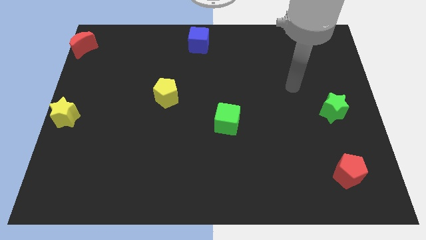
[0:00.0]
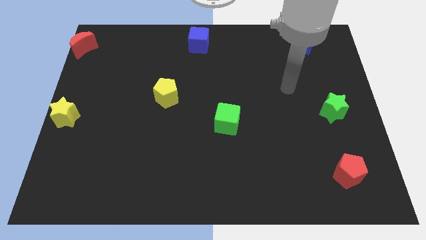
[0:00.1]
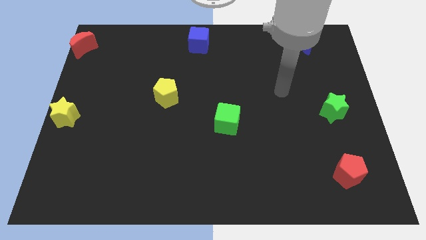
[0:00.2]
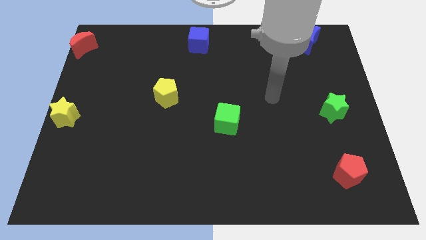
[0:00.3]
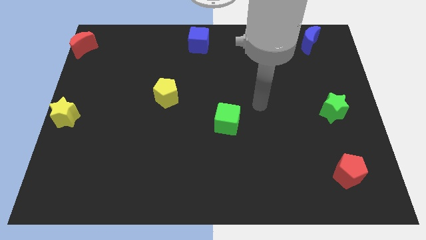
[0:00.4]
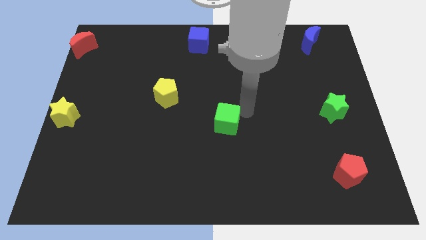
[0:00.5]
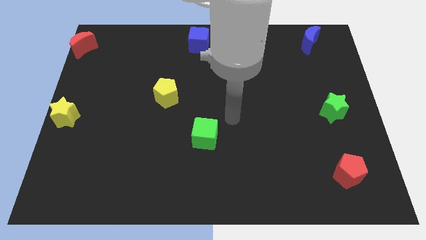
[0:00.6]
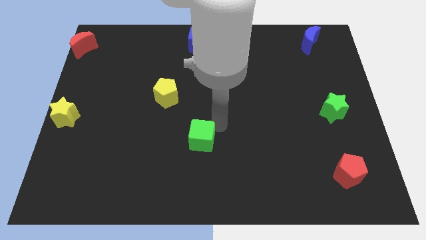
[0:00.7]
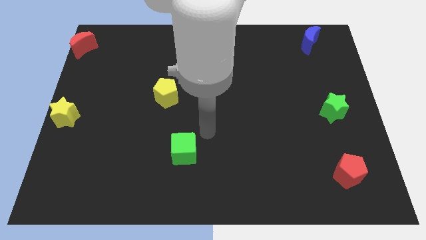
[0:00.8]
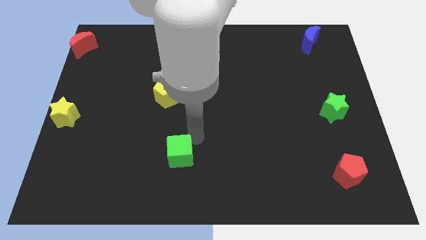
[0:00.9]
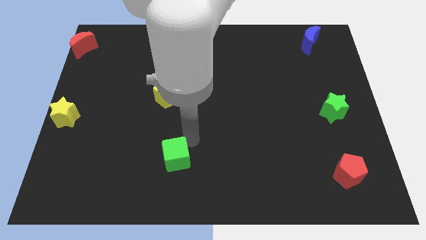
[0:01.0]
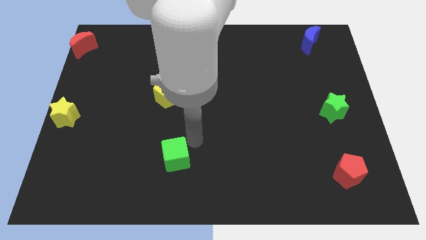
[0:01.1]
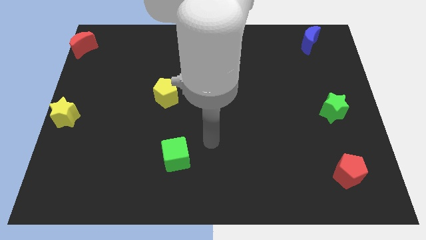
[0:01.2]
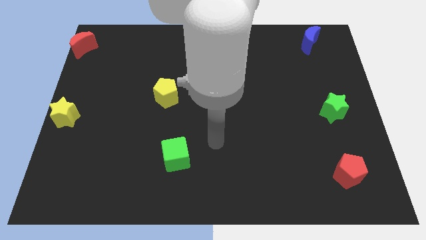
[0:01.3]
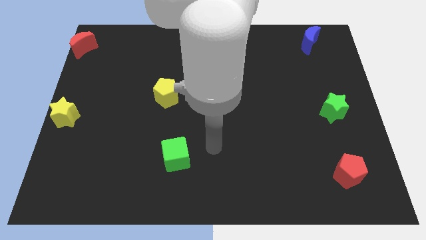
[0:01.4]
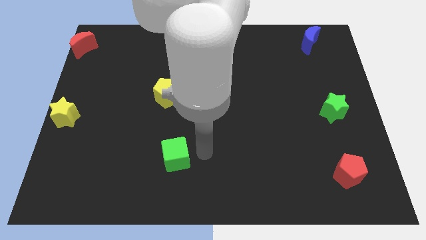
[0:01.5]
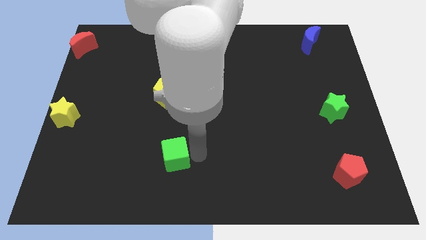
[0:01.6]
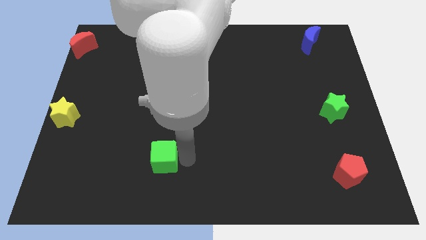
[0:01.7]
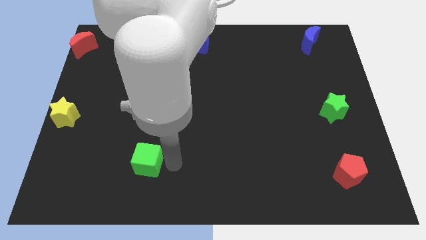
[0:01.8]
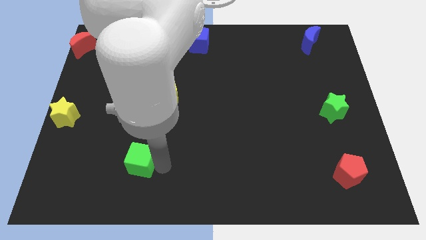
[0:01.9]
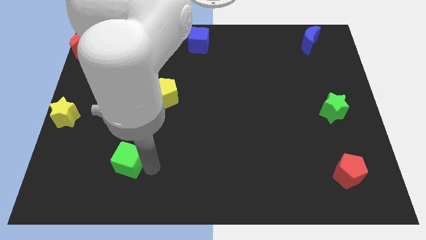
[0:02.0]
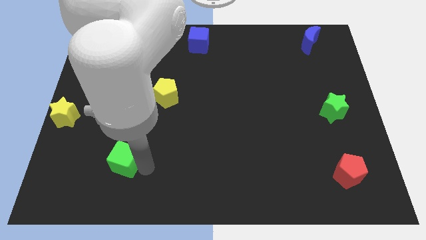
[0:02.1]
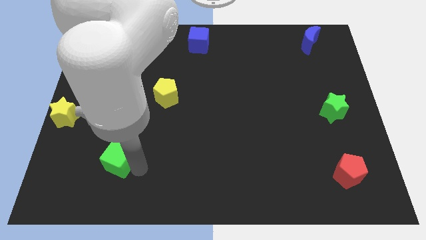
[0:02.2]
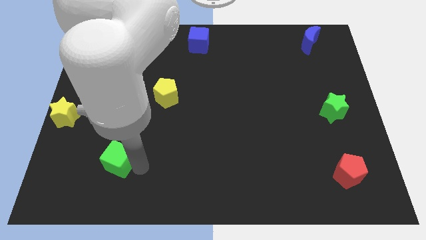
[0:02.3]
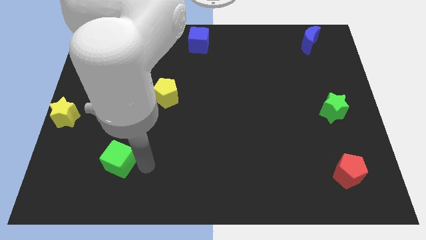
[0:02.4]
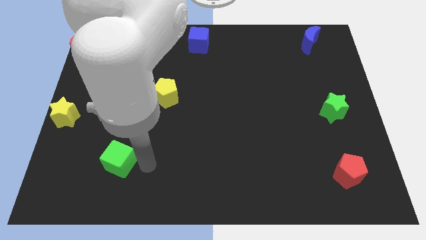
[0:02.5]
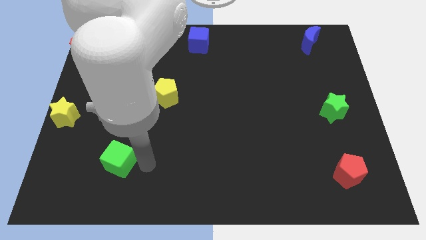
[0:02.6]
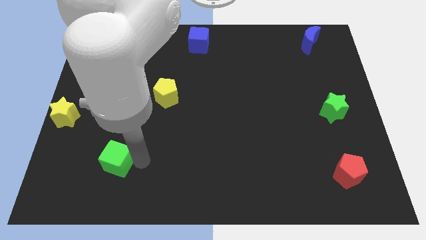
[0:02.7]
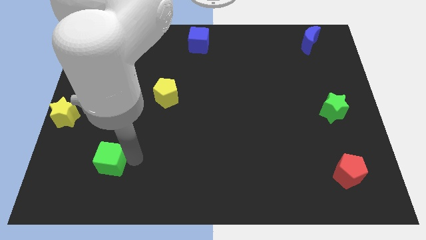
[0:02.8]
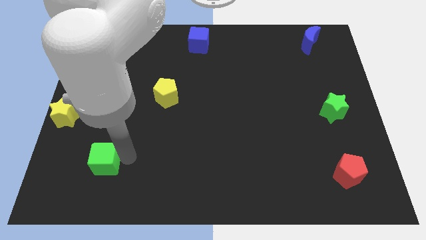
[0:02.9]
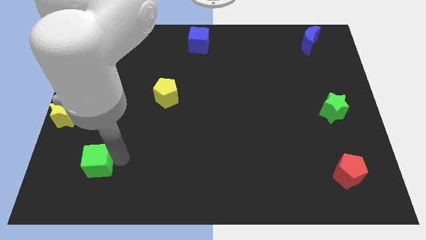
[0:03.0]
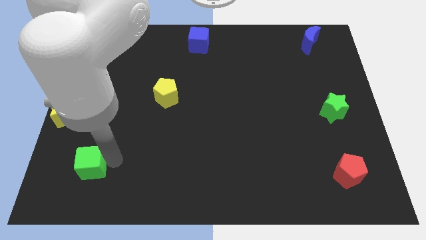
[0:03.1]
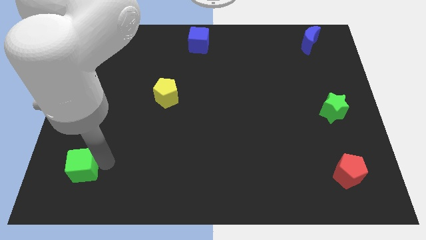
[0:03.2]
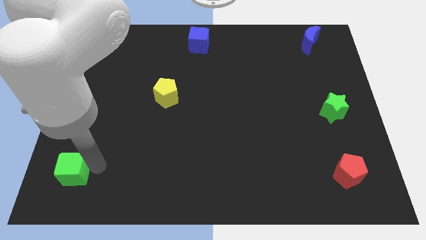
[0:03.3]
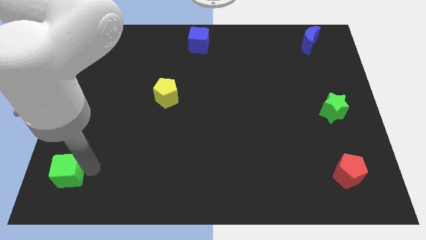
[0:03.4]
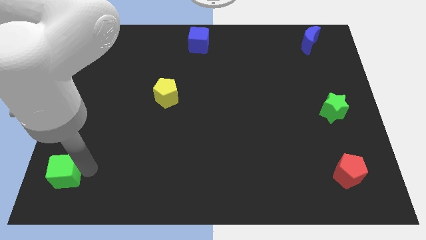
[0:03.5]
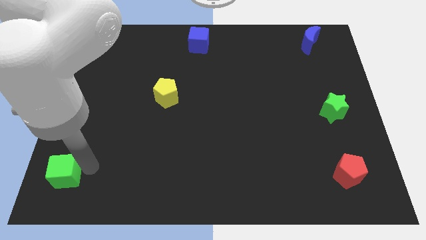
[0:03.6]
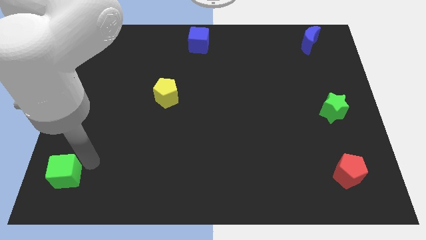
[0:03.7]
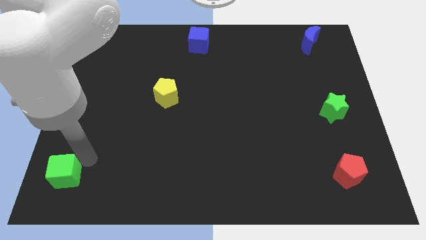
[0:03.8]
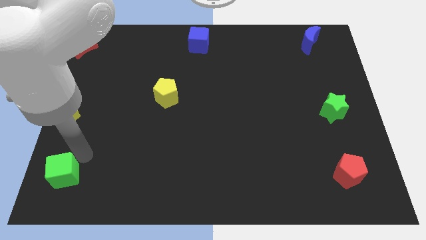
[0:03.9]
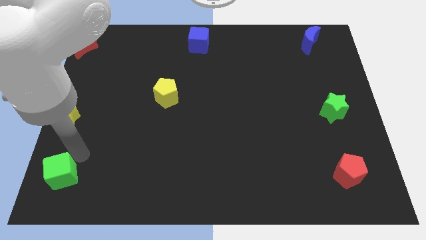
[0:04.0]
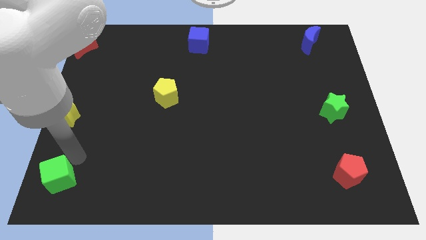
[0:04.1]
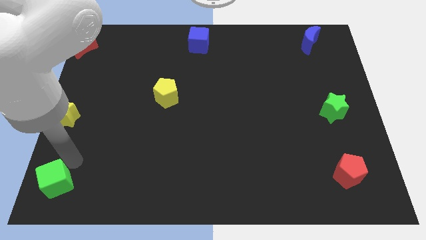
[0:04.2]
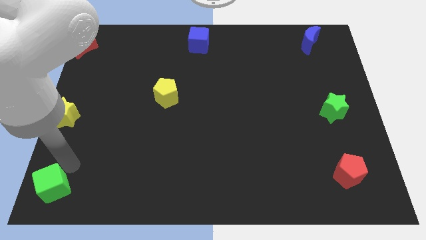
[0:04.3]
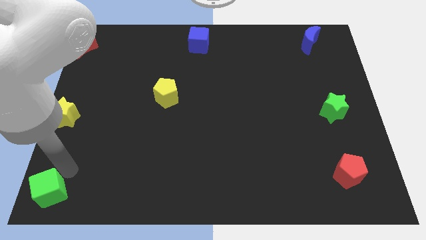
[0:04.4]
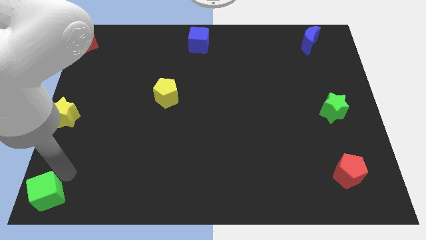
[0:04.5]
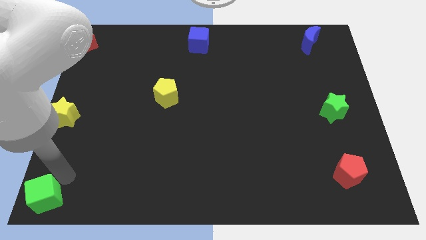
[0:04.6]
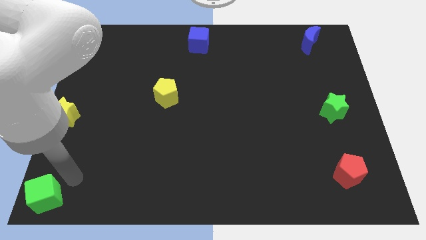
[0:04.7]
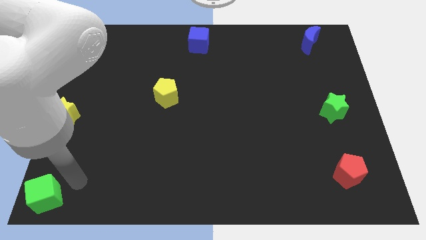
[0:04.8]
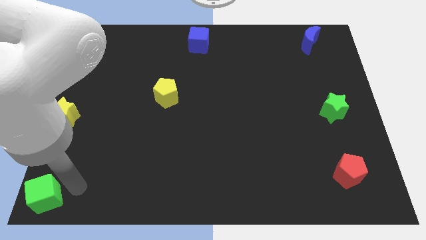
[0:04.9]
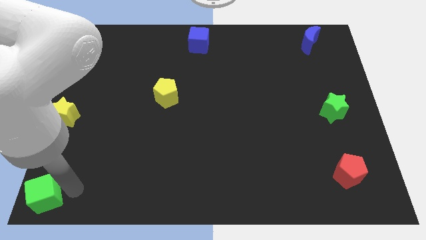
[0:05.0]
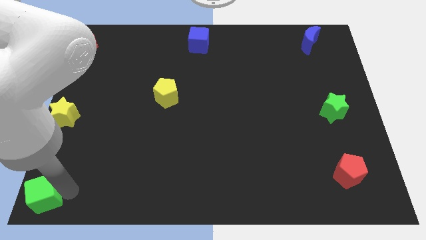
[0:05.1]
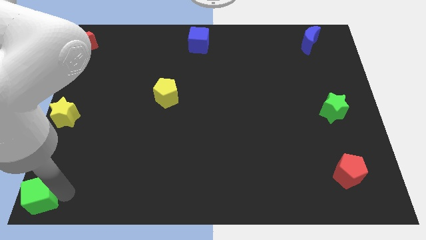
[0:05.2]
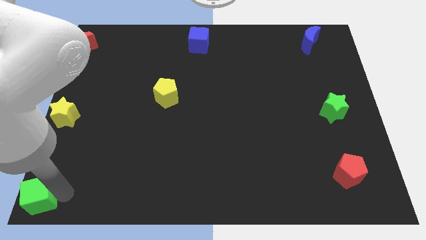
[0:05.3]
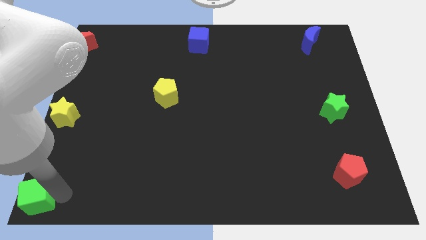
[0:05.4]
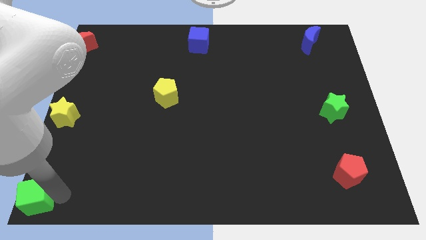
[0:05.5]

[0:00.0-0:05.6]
push the green cube towards the bottom left of the table

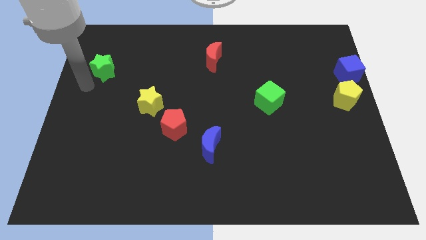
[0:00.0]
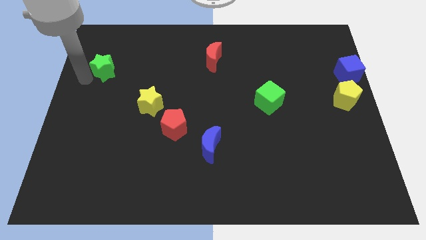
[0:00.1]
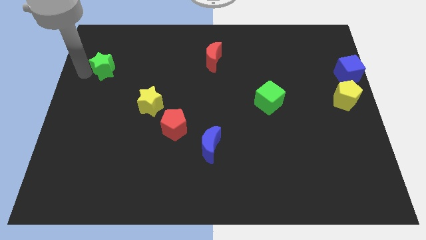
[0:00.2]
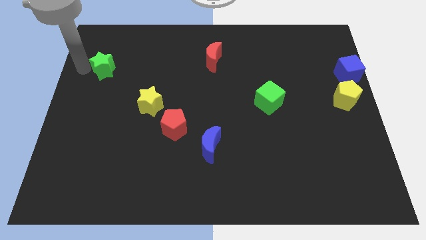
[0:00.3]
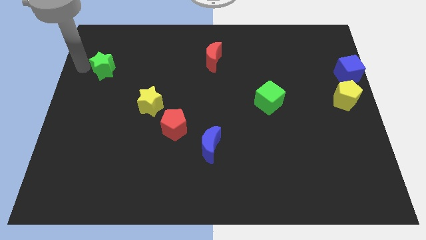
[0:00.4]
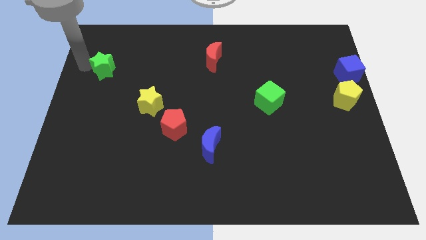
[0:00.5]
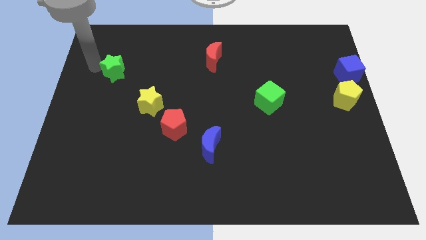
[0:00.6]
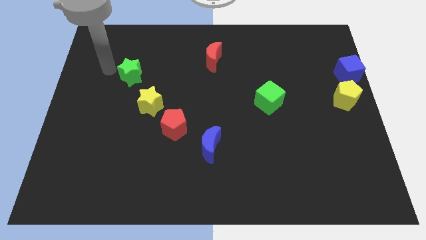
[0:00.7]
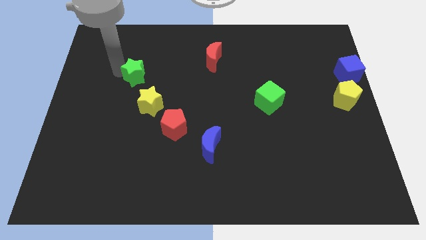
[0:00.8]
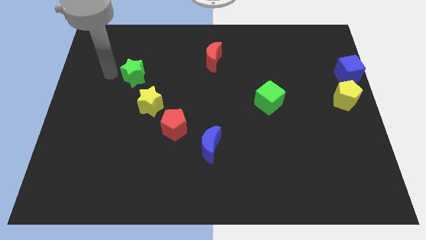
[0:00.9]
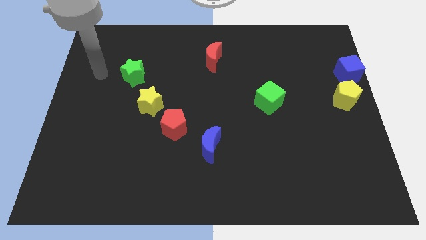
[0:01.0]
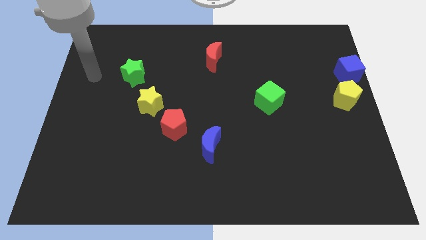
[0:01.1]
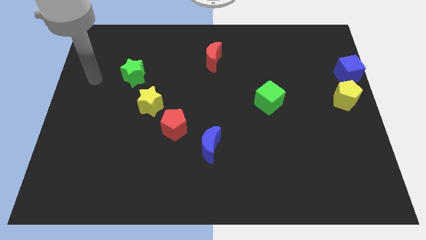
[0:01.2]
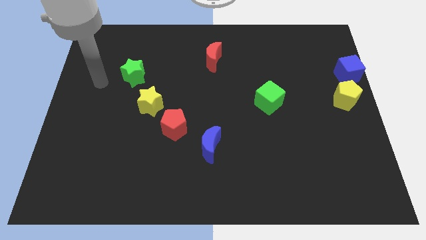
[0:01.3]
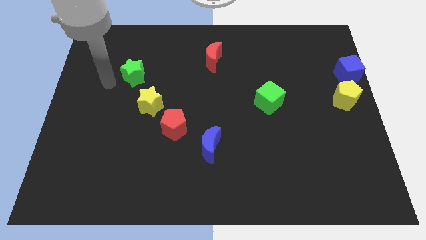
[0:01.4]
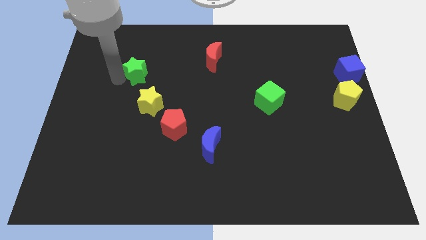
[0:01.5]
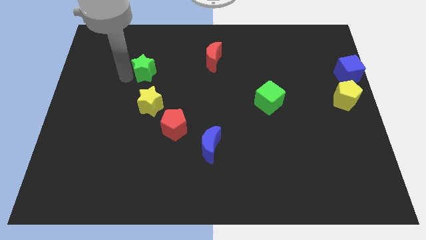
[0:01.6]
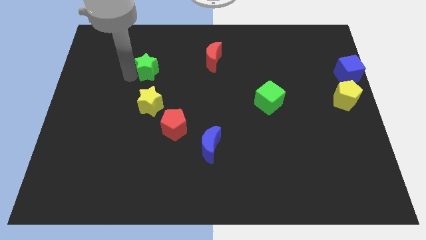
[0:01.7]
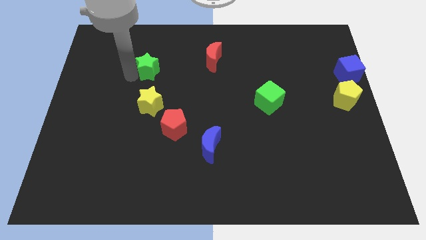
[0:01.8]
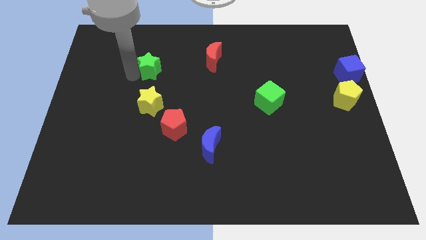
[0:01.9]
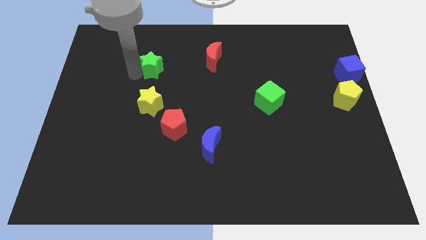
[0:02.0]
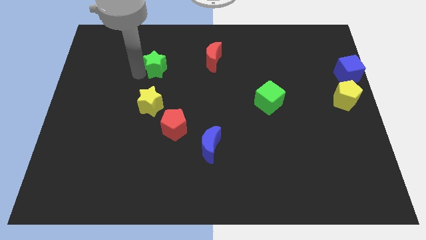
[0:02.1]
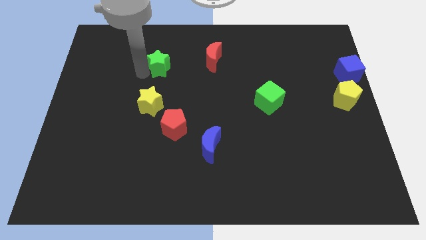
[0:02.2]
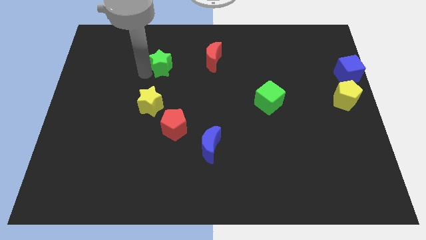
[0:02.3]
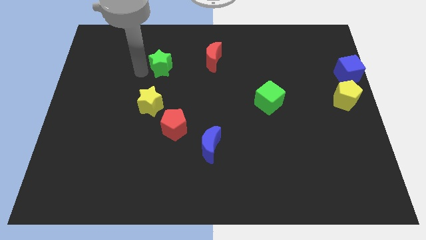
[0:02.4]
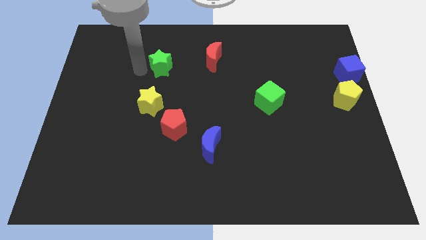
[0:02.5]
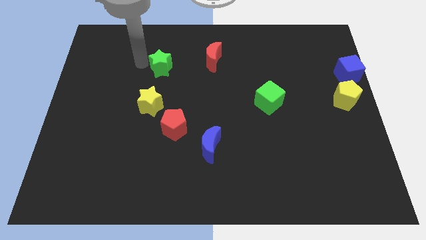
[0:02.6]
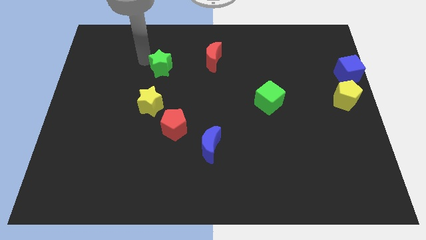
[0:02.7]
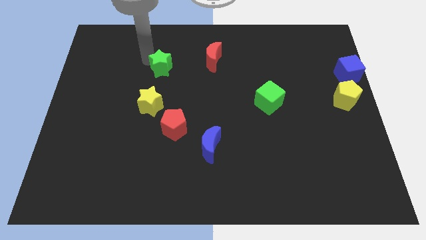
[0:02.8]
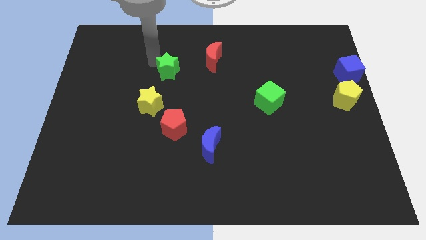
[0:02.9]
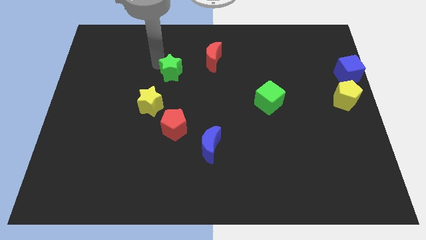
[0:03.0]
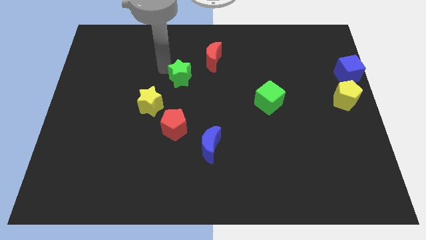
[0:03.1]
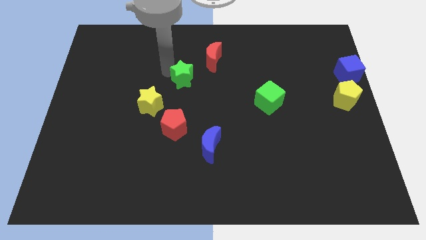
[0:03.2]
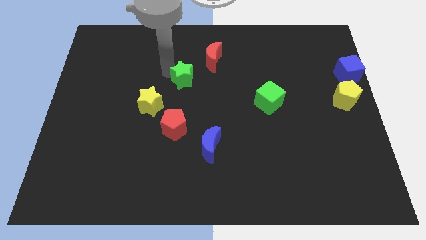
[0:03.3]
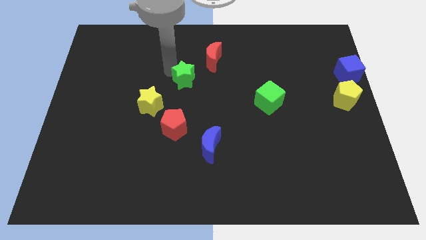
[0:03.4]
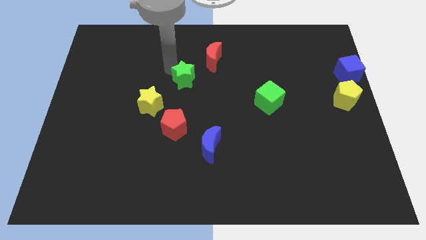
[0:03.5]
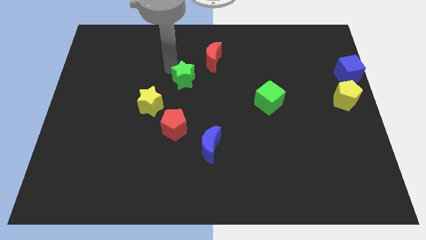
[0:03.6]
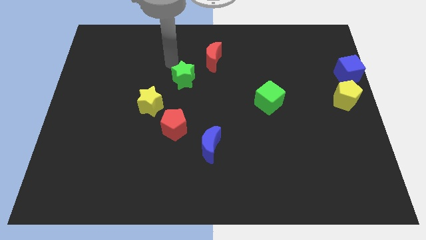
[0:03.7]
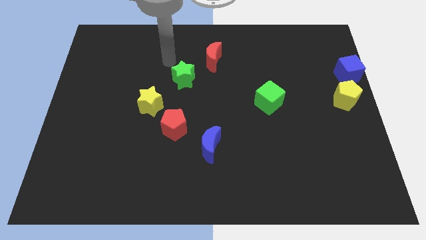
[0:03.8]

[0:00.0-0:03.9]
move the green star to the top right of the yellow star
